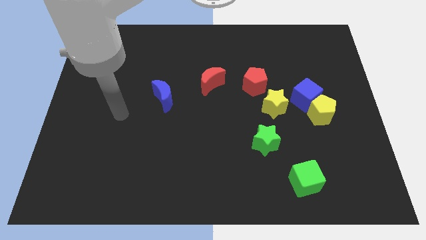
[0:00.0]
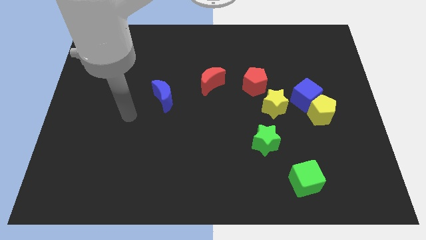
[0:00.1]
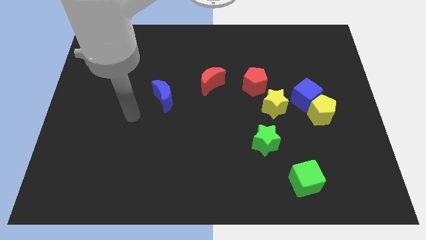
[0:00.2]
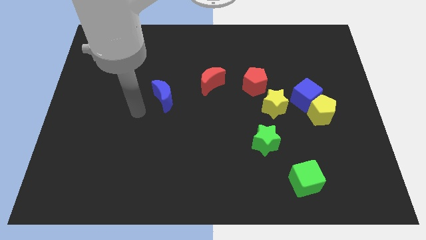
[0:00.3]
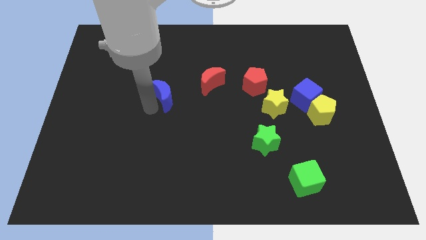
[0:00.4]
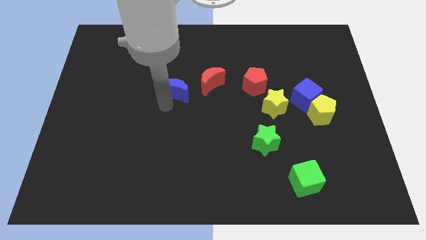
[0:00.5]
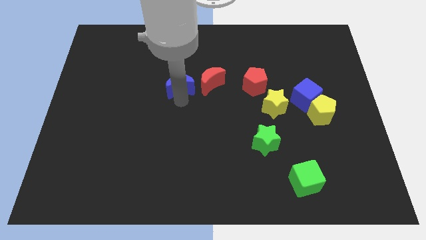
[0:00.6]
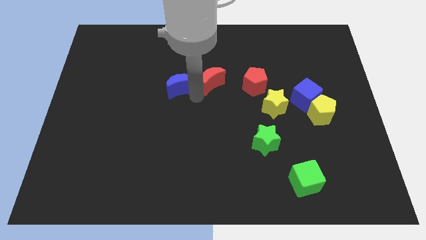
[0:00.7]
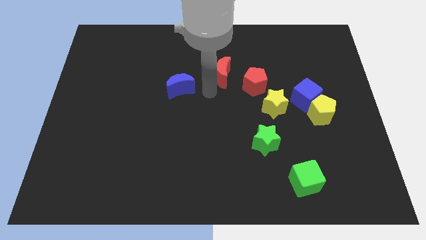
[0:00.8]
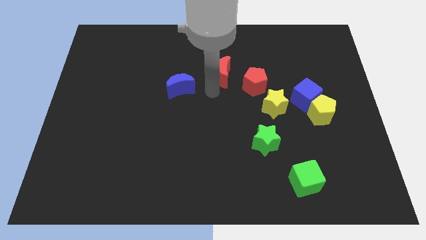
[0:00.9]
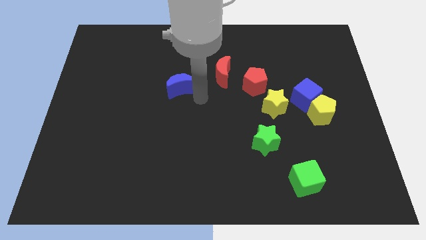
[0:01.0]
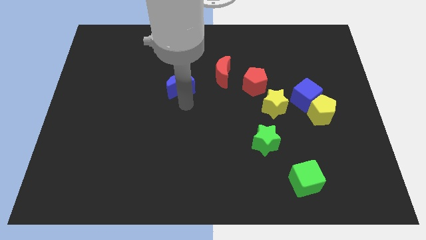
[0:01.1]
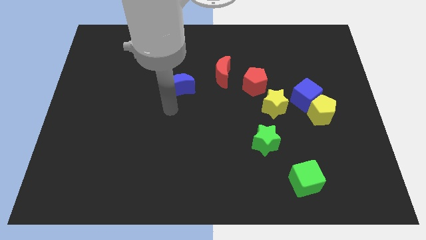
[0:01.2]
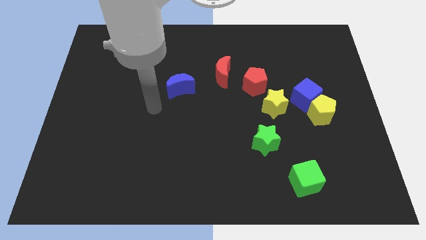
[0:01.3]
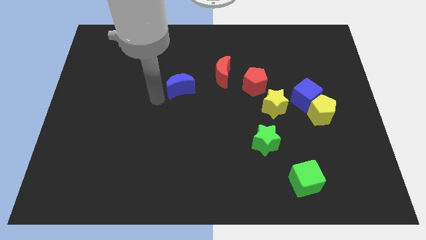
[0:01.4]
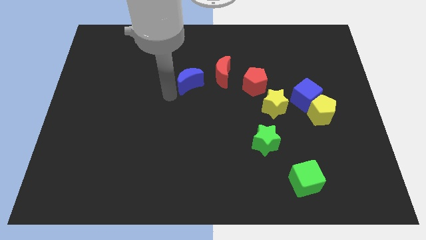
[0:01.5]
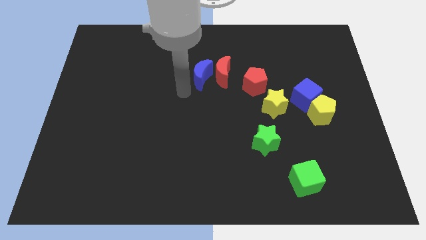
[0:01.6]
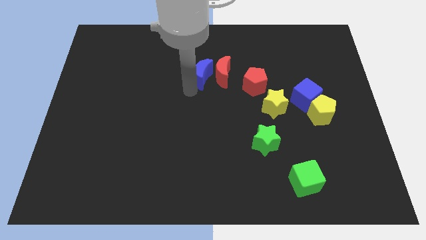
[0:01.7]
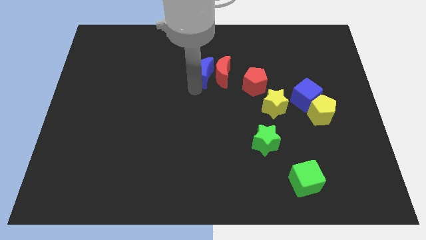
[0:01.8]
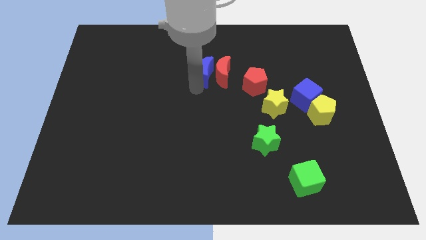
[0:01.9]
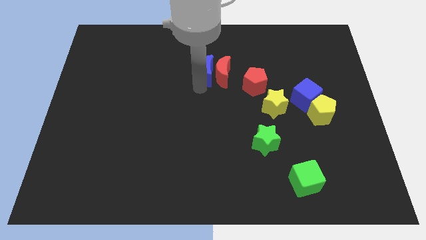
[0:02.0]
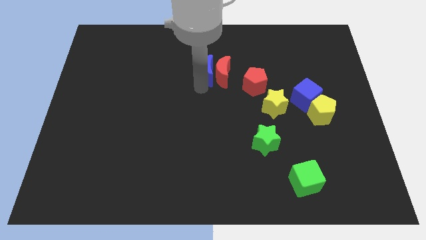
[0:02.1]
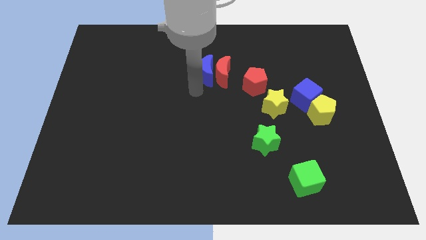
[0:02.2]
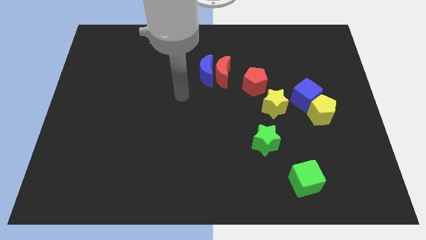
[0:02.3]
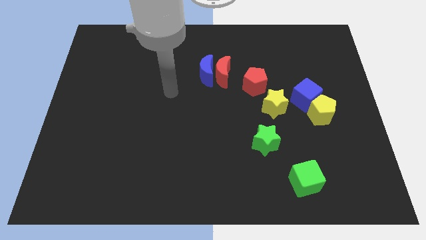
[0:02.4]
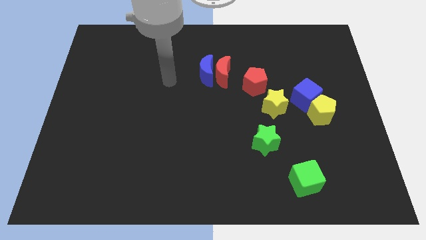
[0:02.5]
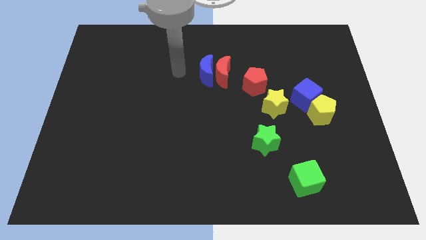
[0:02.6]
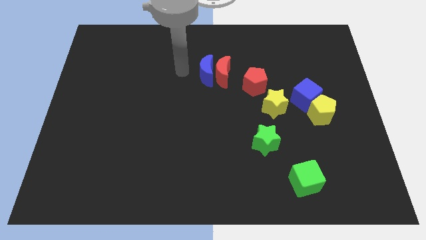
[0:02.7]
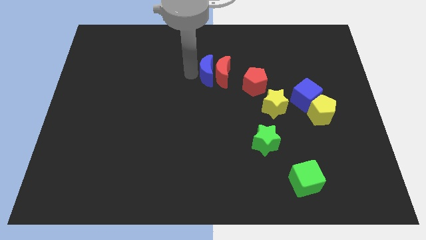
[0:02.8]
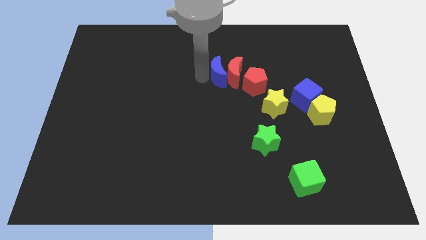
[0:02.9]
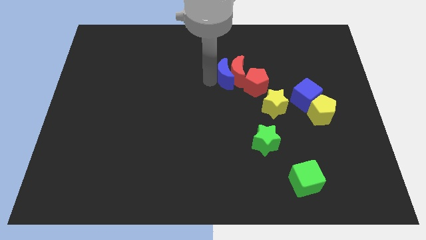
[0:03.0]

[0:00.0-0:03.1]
push the red and blue crescent towards the right side of the board

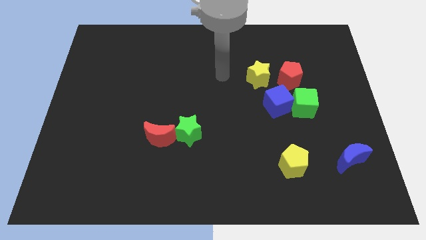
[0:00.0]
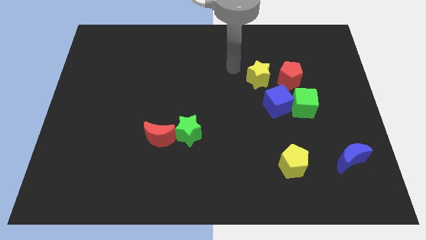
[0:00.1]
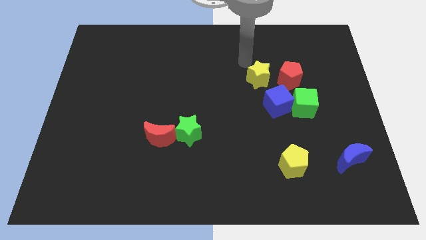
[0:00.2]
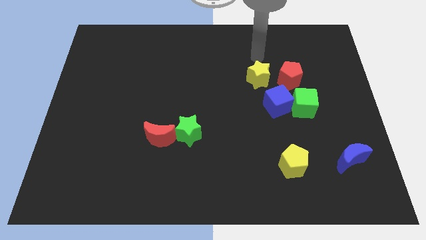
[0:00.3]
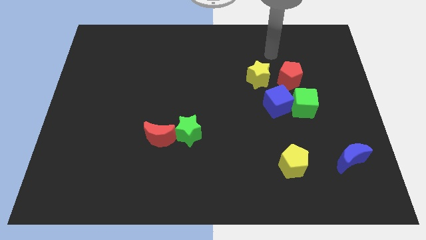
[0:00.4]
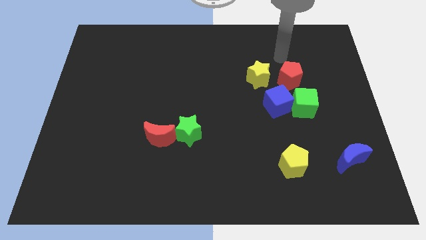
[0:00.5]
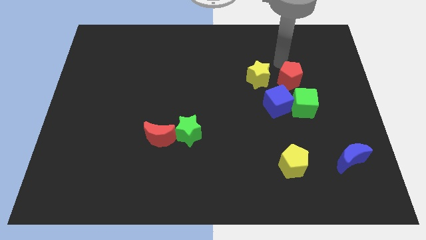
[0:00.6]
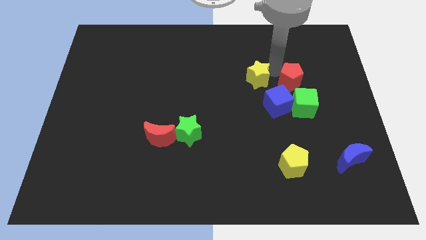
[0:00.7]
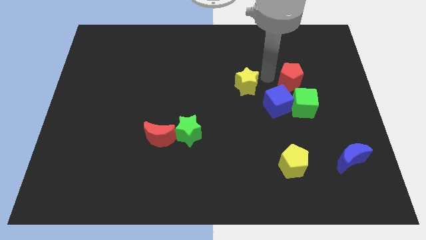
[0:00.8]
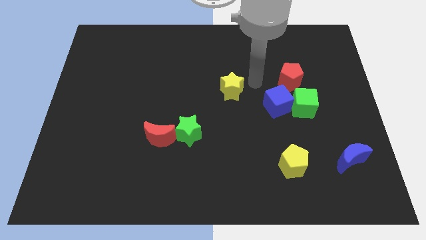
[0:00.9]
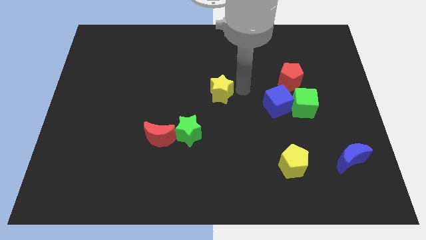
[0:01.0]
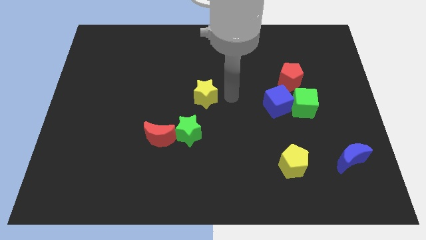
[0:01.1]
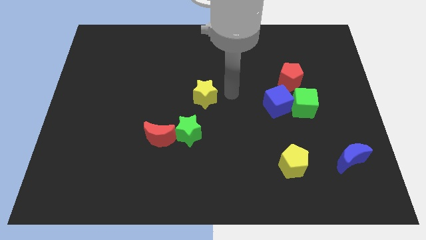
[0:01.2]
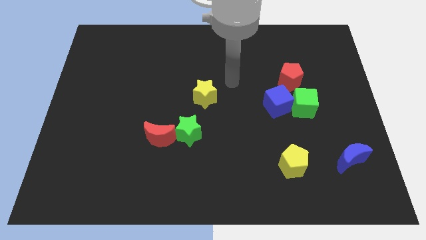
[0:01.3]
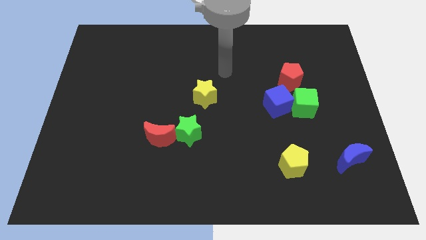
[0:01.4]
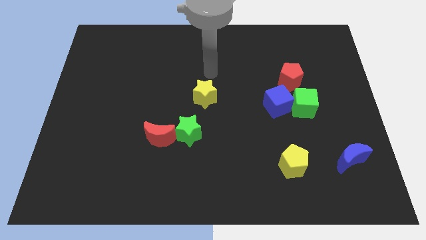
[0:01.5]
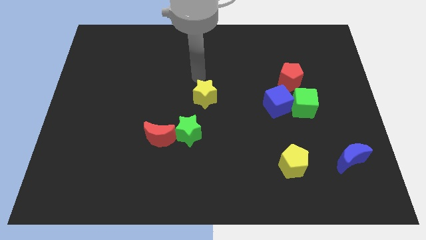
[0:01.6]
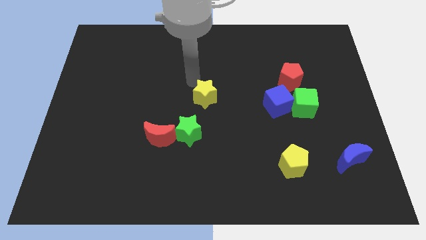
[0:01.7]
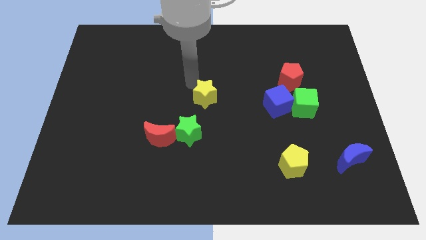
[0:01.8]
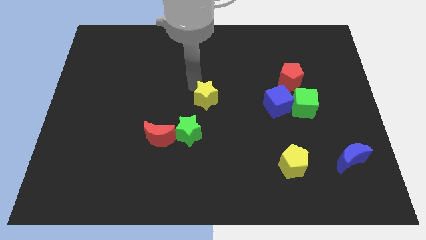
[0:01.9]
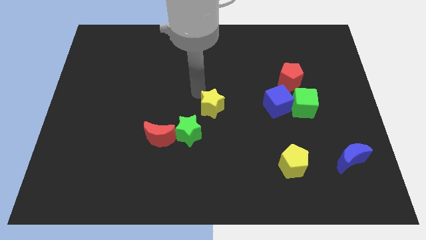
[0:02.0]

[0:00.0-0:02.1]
place the yellow star center of the board

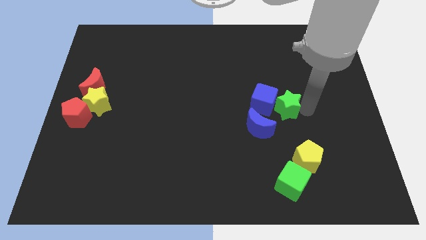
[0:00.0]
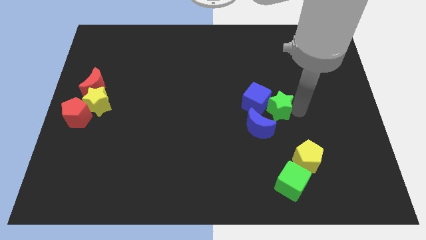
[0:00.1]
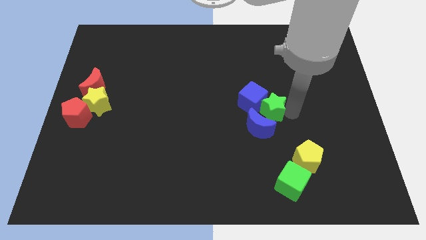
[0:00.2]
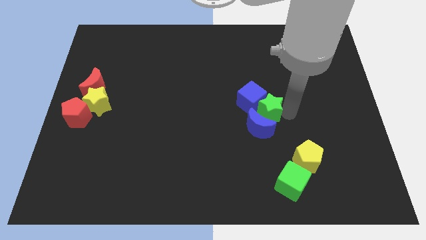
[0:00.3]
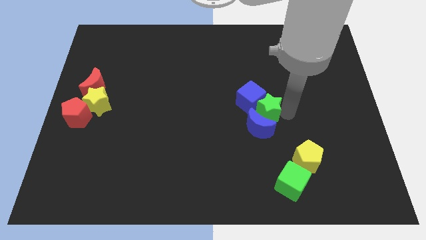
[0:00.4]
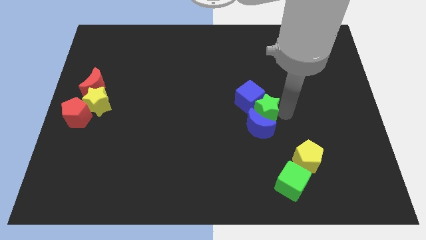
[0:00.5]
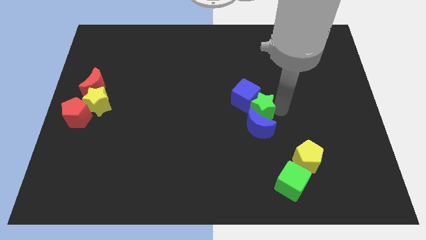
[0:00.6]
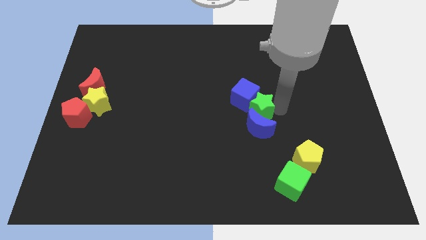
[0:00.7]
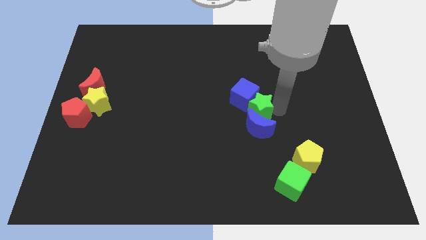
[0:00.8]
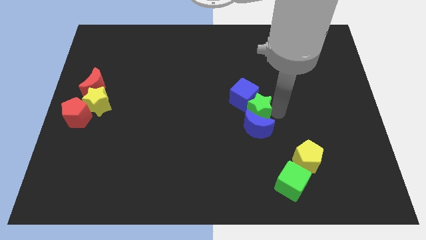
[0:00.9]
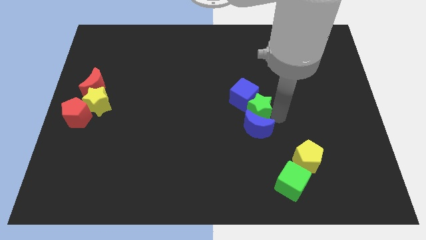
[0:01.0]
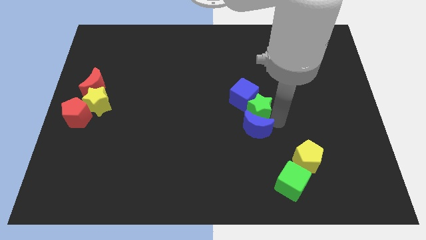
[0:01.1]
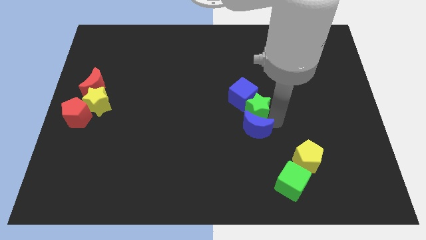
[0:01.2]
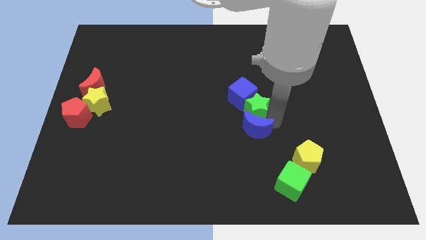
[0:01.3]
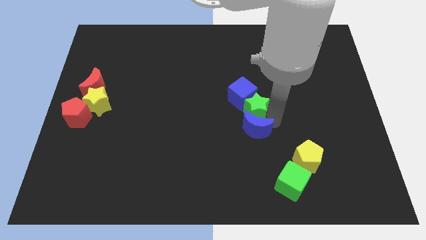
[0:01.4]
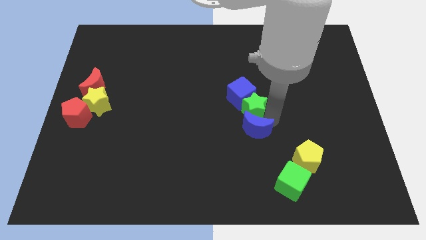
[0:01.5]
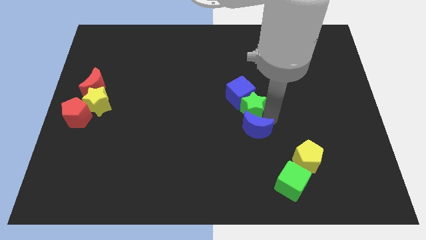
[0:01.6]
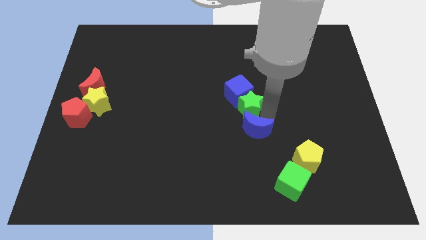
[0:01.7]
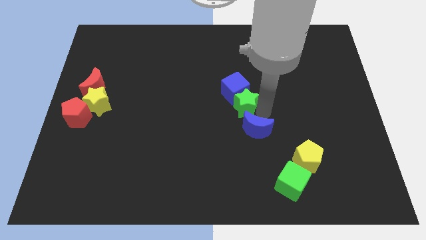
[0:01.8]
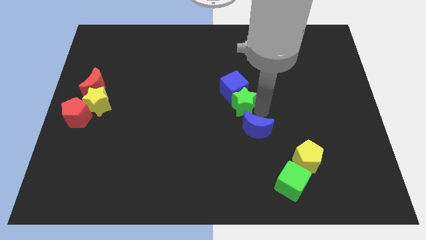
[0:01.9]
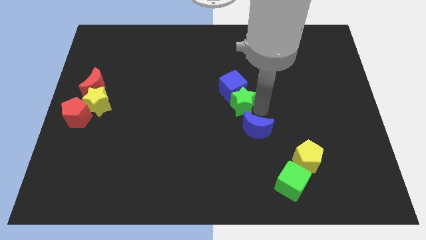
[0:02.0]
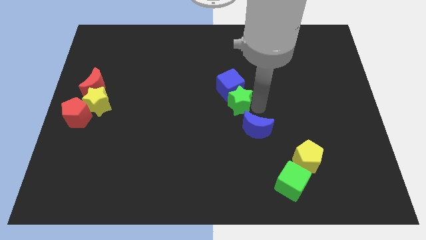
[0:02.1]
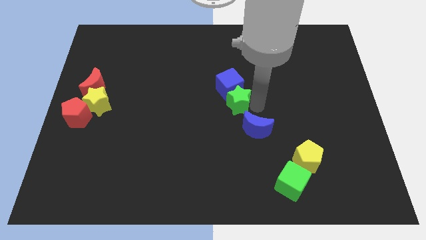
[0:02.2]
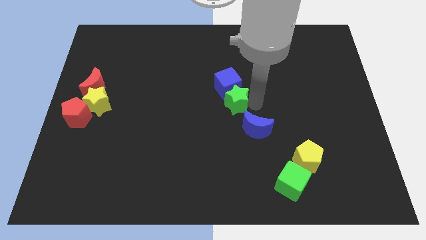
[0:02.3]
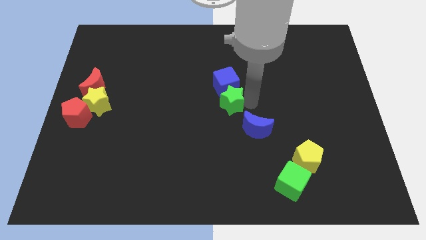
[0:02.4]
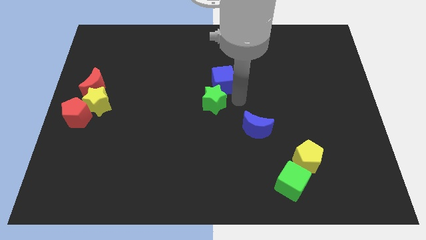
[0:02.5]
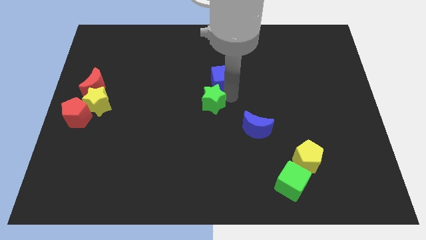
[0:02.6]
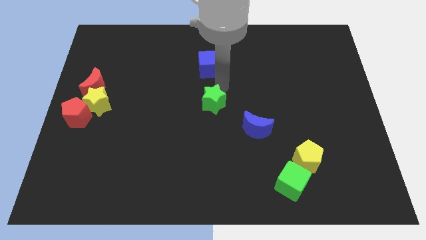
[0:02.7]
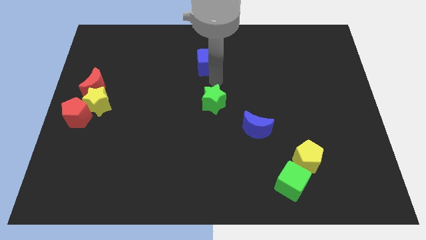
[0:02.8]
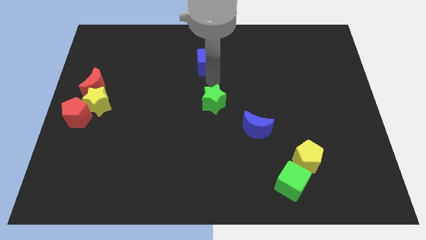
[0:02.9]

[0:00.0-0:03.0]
move the green star to the top left of the blue crescent

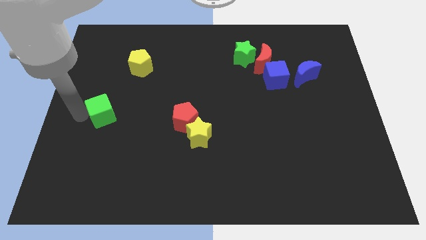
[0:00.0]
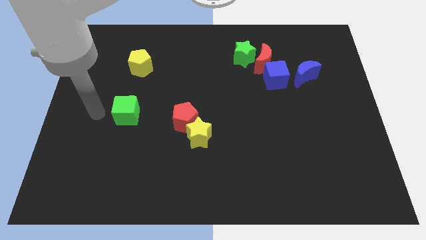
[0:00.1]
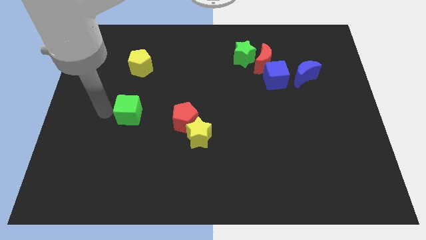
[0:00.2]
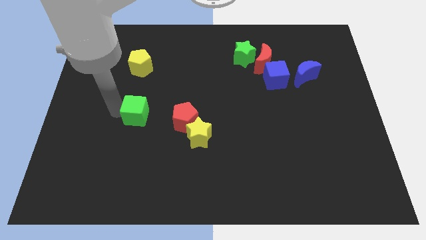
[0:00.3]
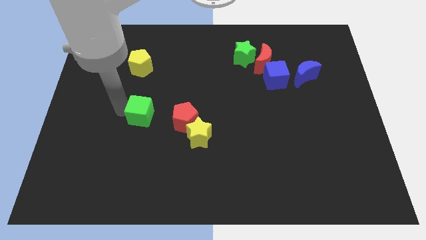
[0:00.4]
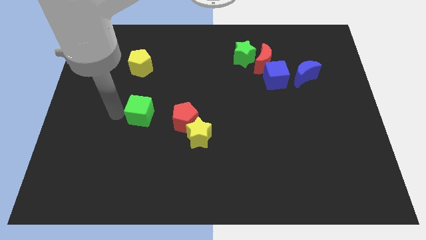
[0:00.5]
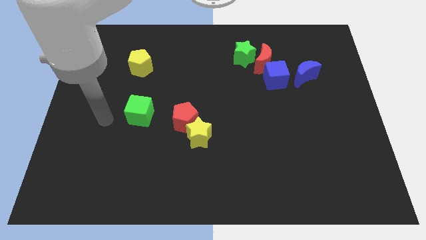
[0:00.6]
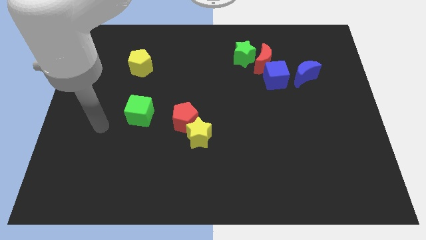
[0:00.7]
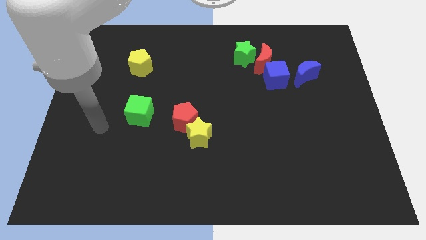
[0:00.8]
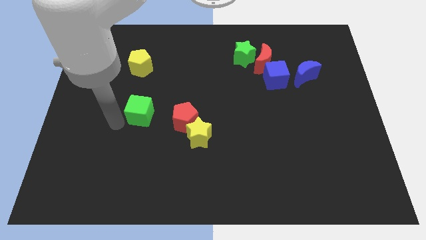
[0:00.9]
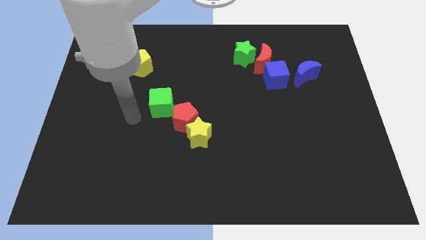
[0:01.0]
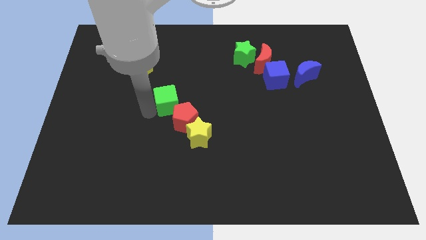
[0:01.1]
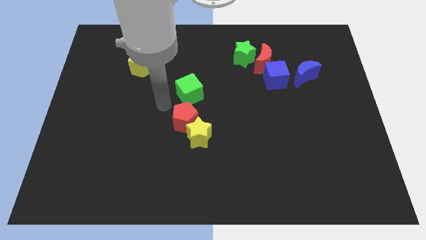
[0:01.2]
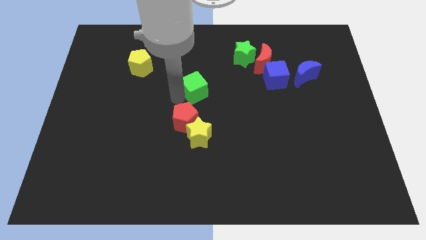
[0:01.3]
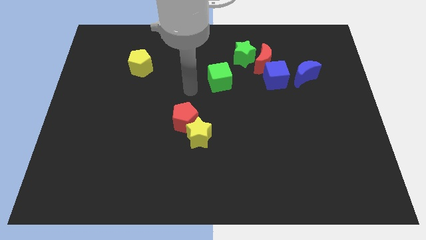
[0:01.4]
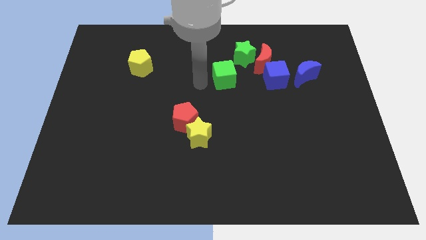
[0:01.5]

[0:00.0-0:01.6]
place the green cube between green star and red pentagon
